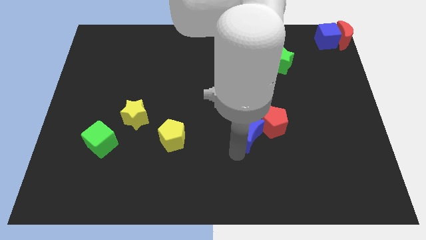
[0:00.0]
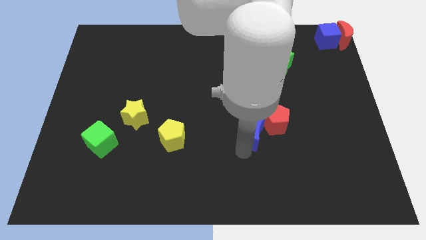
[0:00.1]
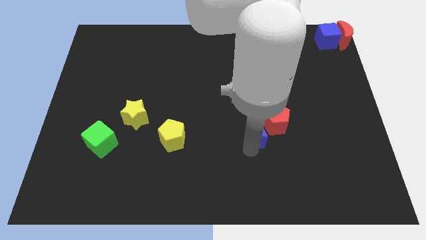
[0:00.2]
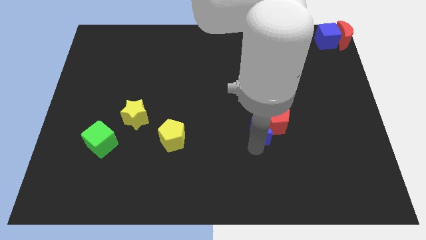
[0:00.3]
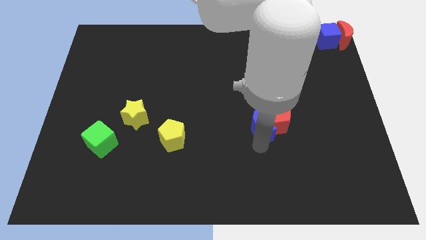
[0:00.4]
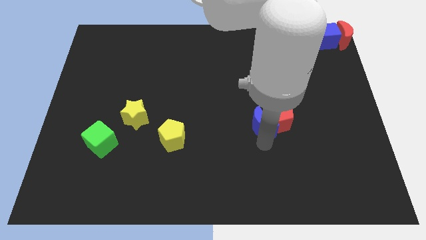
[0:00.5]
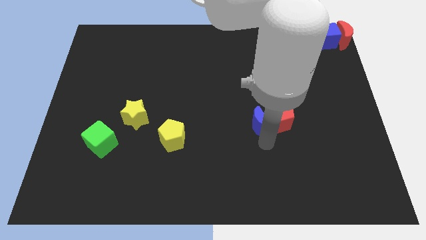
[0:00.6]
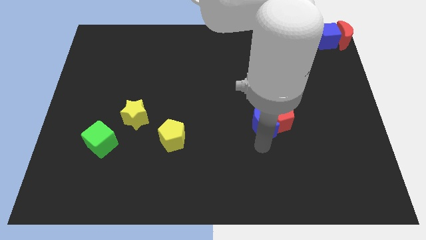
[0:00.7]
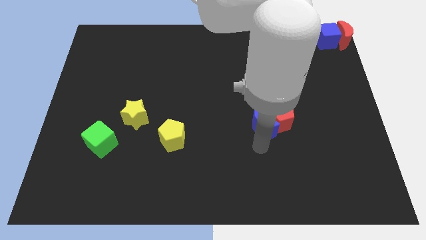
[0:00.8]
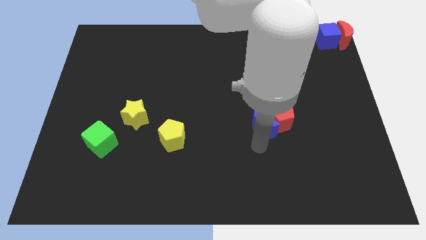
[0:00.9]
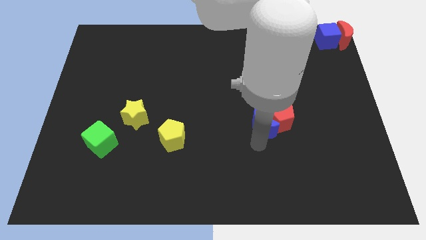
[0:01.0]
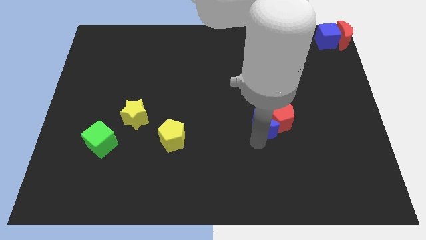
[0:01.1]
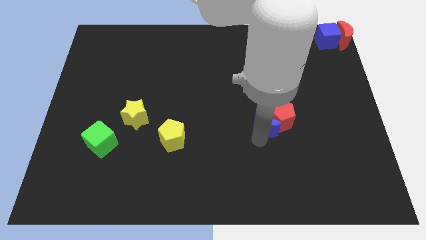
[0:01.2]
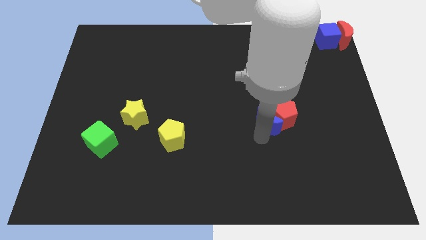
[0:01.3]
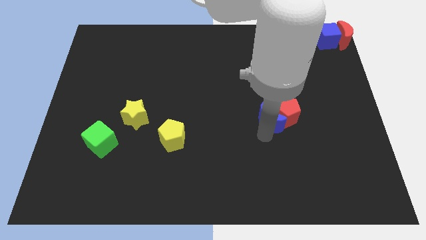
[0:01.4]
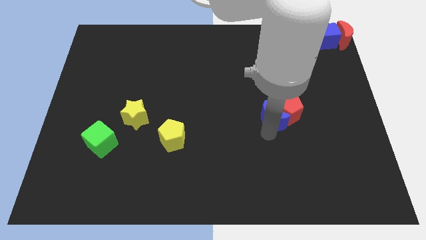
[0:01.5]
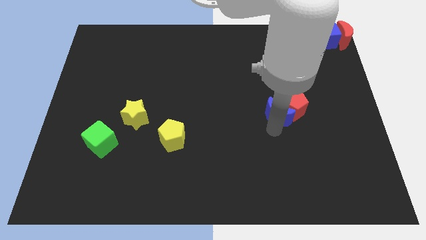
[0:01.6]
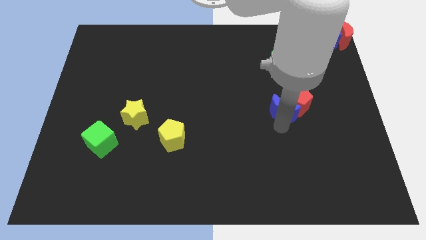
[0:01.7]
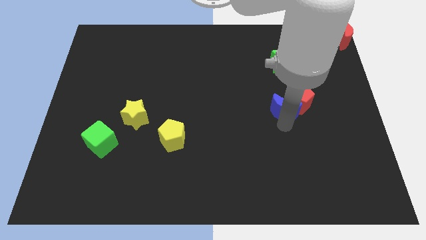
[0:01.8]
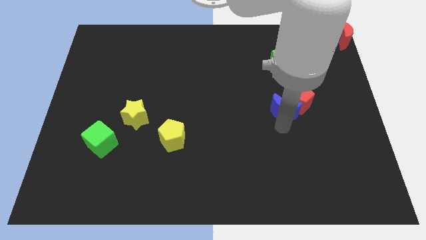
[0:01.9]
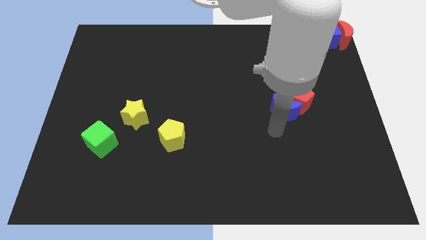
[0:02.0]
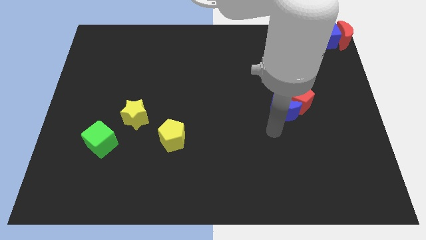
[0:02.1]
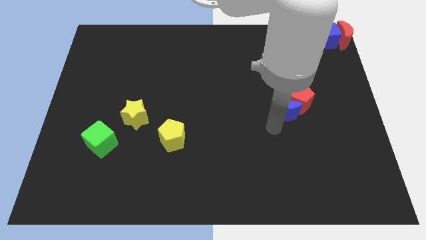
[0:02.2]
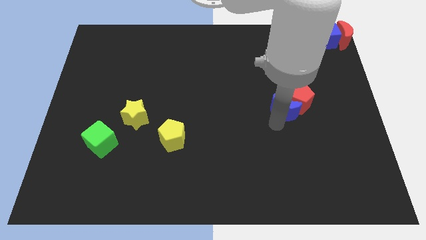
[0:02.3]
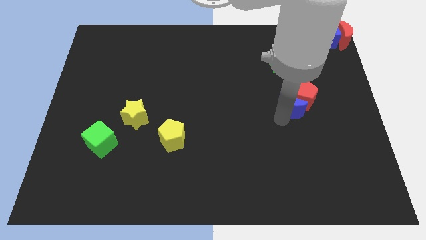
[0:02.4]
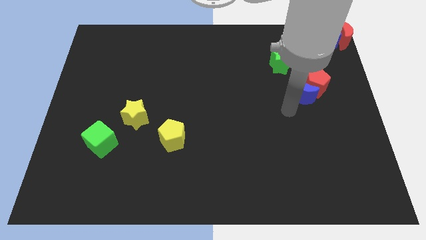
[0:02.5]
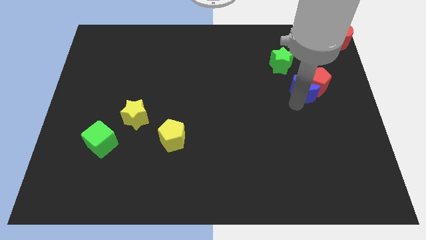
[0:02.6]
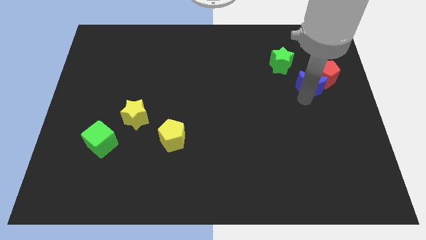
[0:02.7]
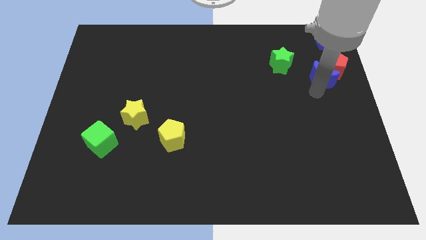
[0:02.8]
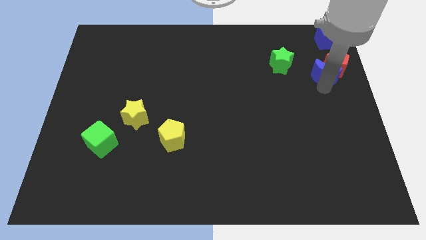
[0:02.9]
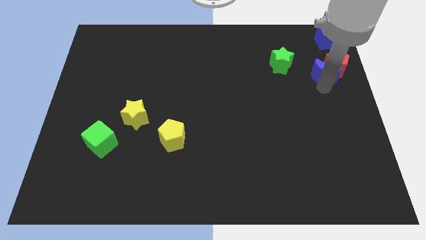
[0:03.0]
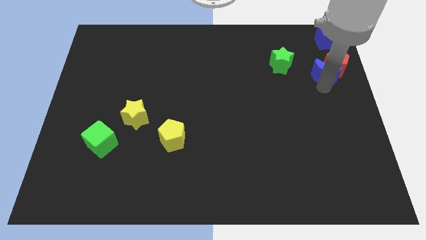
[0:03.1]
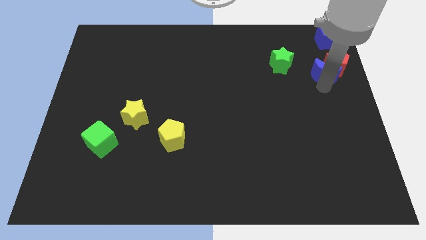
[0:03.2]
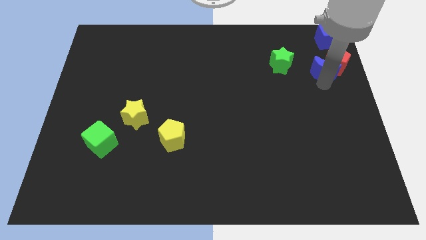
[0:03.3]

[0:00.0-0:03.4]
move the red pentagon and blue crescent towards the top right of the board

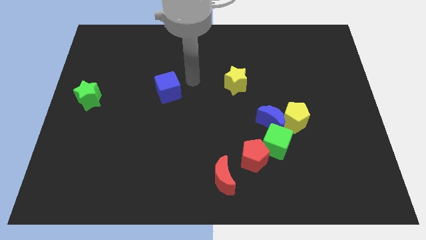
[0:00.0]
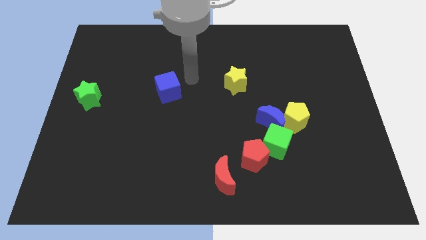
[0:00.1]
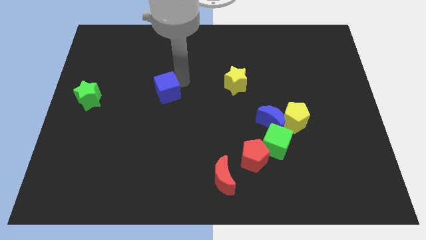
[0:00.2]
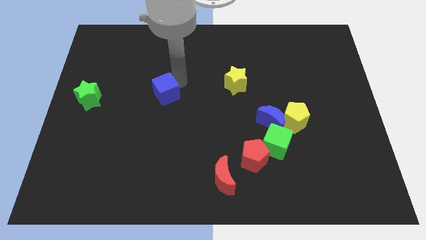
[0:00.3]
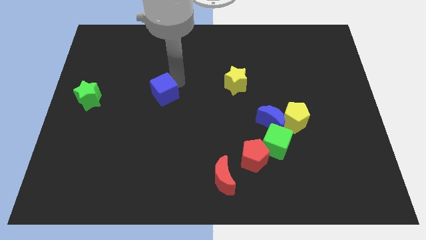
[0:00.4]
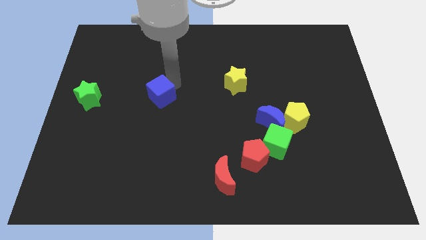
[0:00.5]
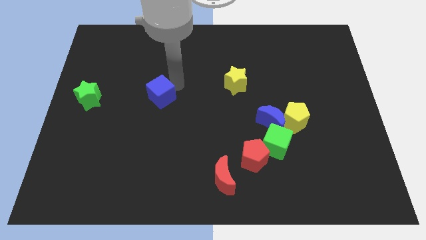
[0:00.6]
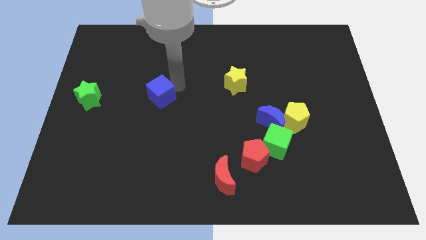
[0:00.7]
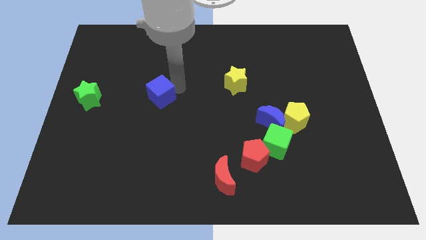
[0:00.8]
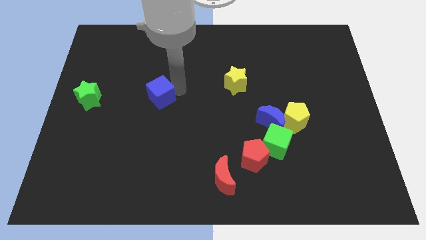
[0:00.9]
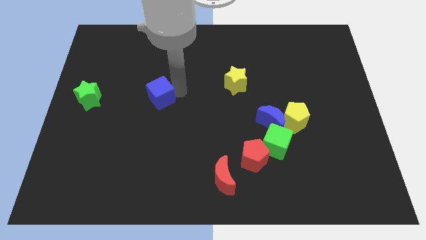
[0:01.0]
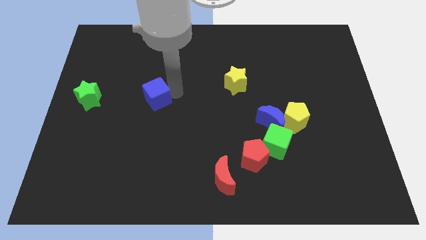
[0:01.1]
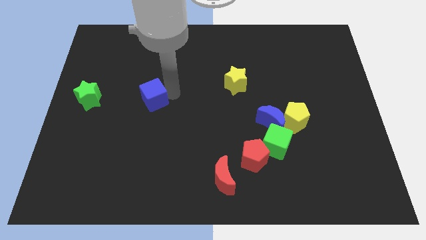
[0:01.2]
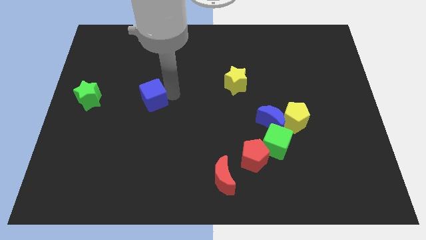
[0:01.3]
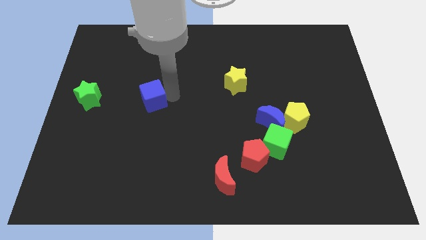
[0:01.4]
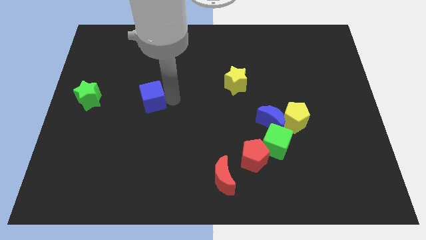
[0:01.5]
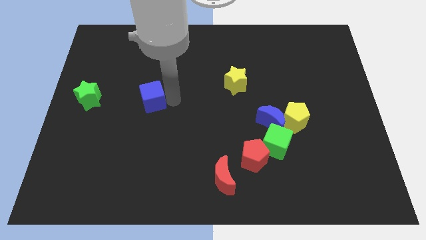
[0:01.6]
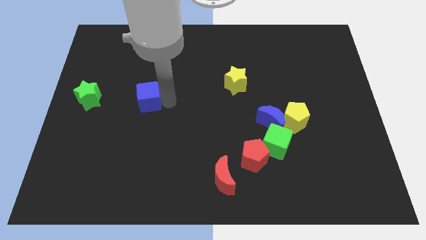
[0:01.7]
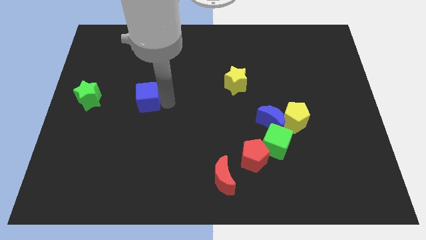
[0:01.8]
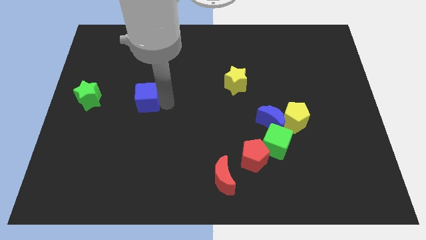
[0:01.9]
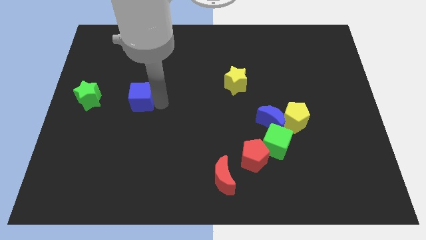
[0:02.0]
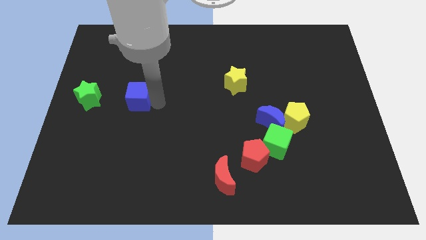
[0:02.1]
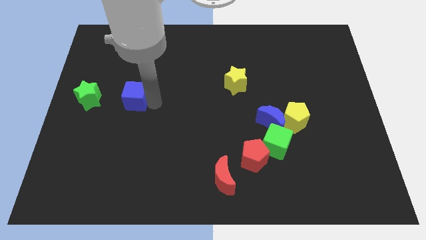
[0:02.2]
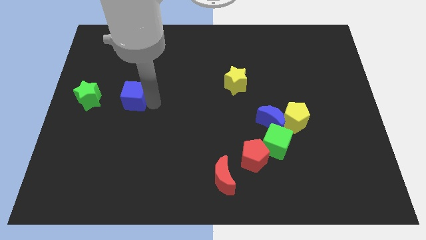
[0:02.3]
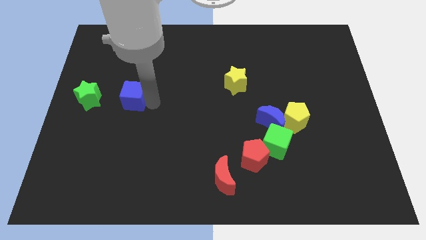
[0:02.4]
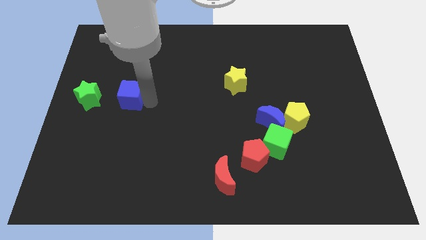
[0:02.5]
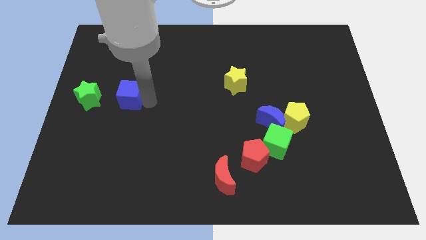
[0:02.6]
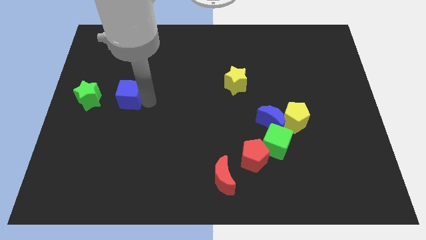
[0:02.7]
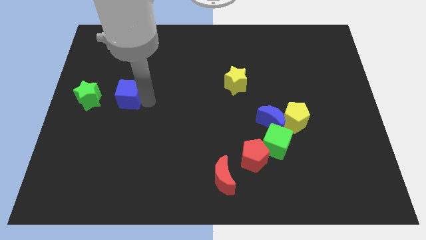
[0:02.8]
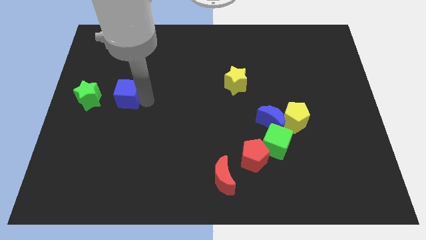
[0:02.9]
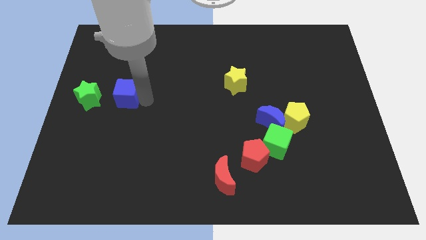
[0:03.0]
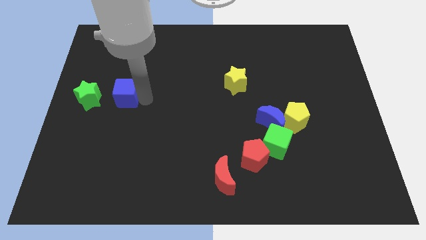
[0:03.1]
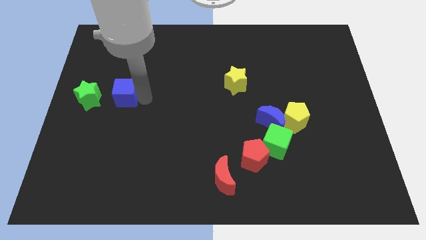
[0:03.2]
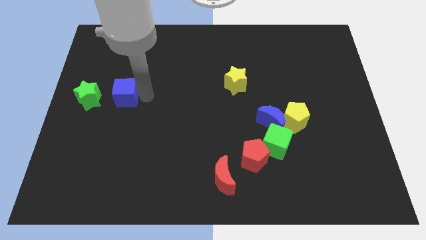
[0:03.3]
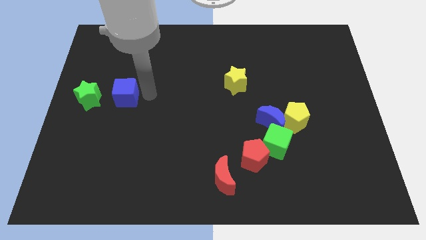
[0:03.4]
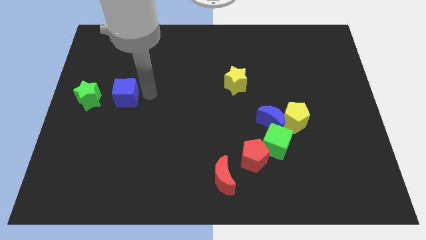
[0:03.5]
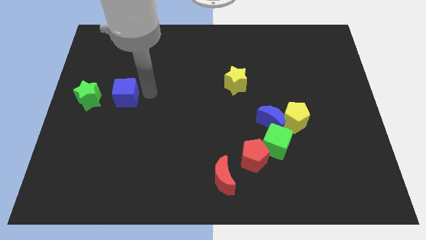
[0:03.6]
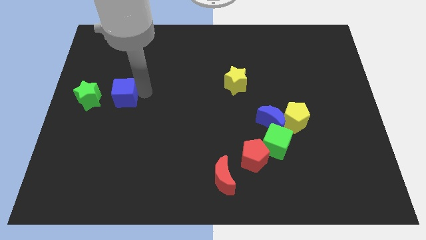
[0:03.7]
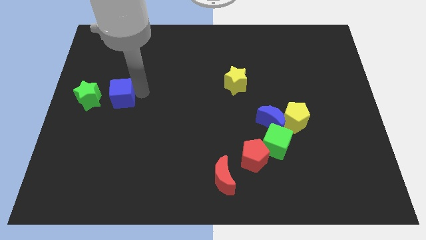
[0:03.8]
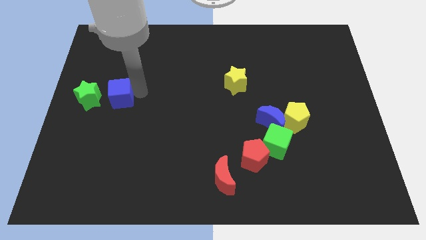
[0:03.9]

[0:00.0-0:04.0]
push the blue cube towards the green star

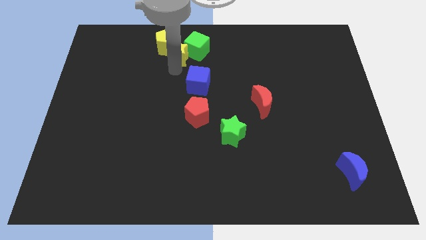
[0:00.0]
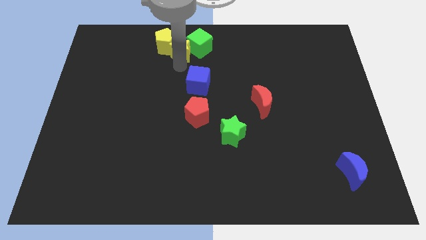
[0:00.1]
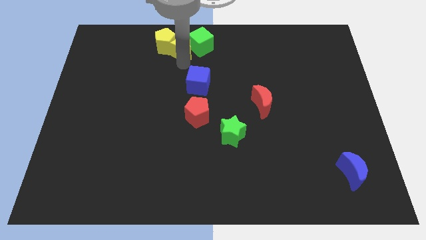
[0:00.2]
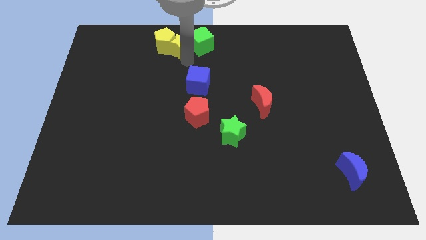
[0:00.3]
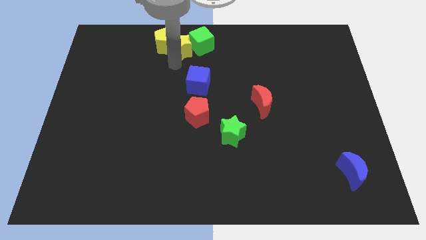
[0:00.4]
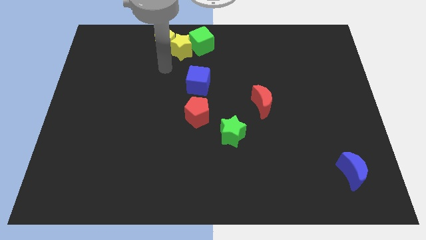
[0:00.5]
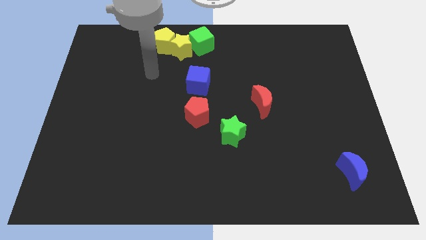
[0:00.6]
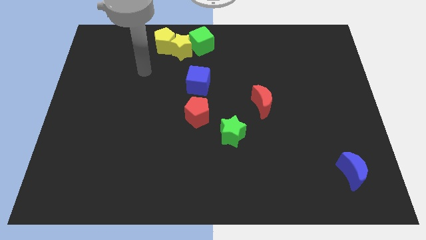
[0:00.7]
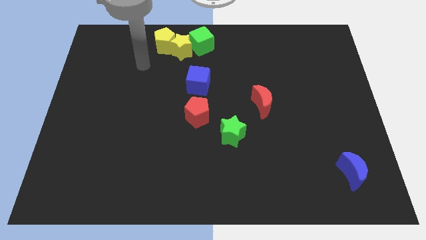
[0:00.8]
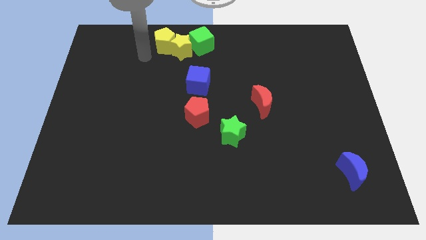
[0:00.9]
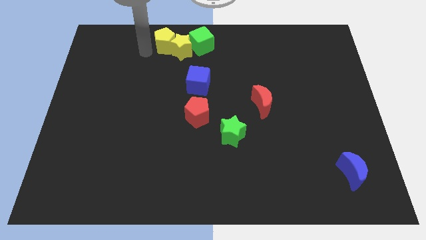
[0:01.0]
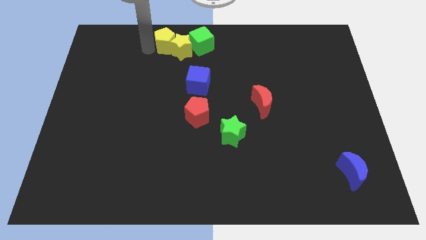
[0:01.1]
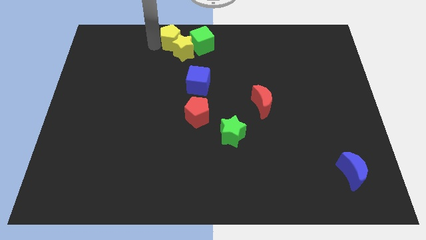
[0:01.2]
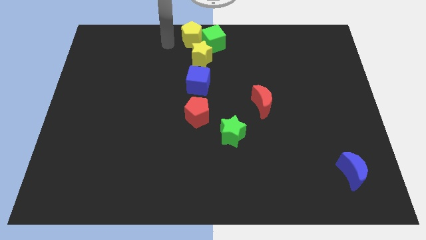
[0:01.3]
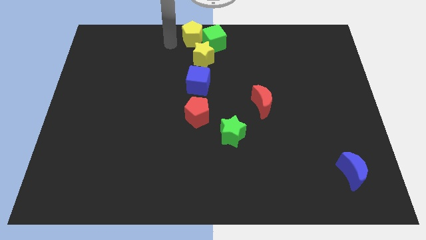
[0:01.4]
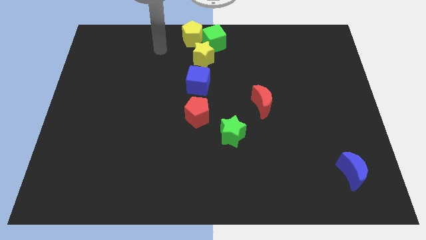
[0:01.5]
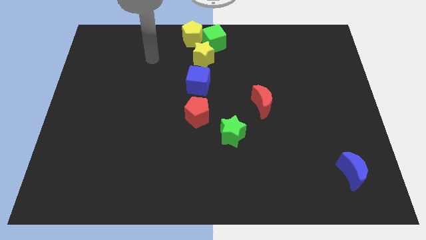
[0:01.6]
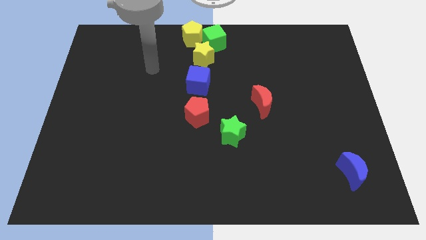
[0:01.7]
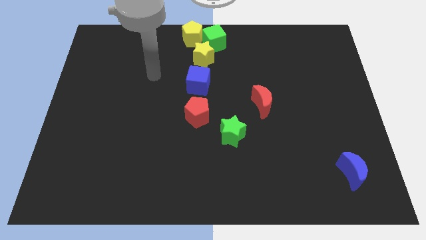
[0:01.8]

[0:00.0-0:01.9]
slightly move the yellow pentagon and green cube to the top center of the board
